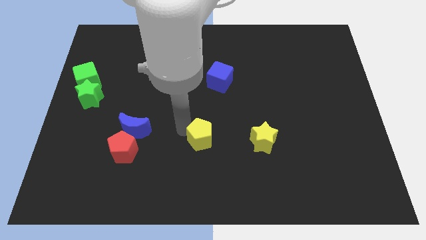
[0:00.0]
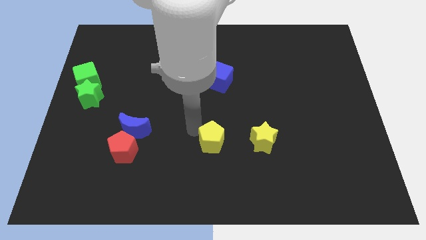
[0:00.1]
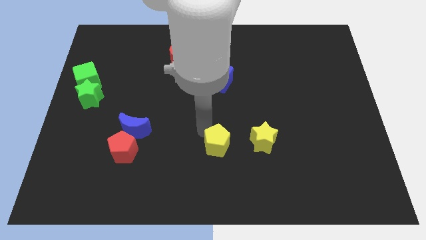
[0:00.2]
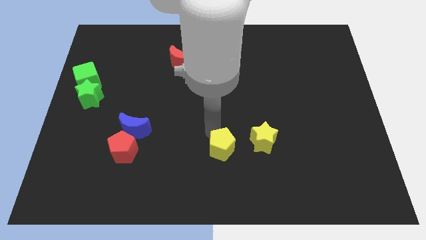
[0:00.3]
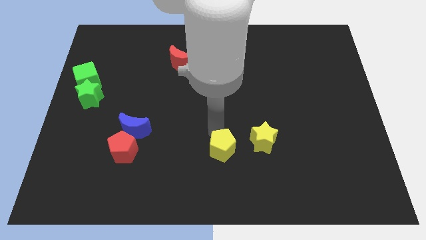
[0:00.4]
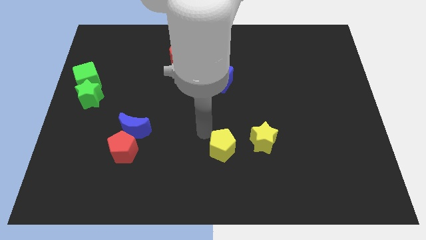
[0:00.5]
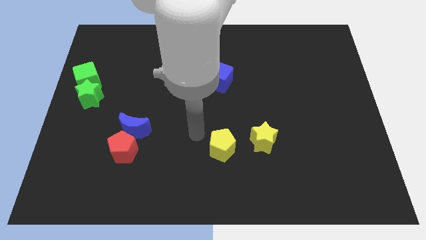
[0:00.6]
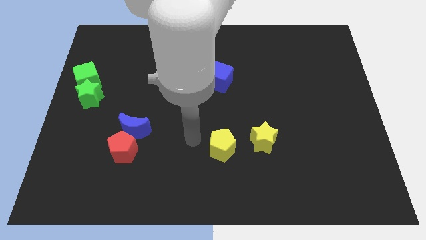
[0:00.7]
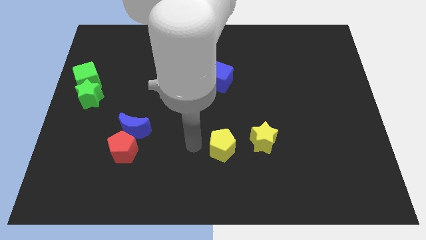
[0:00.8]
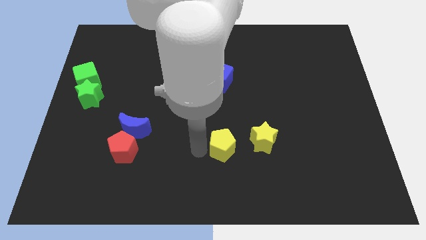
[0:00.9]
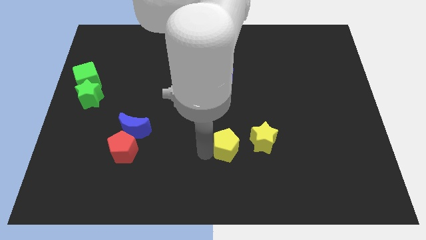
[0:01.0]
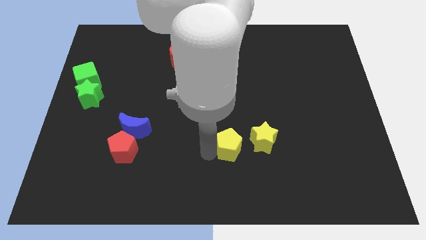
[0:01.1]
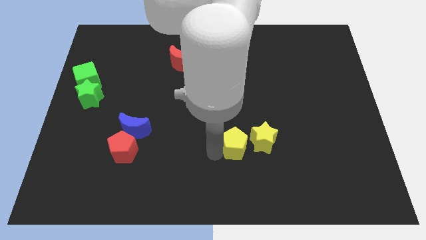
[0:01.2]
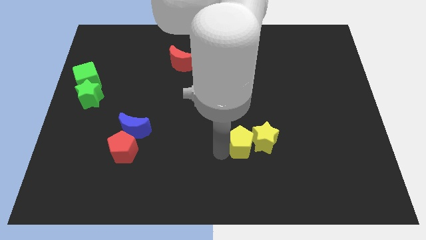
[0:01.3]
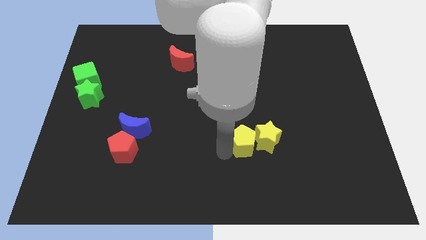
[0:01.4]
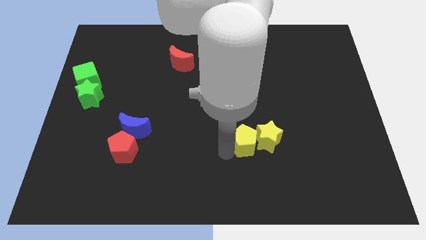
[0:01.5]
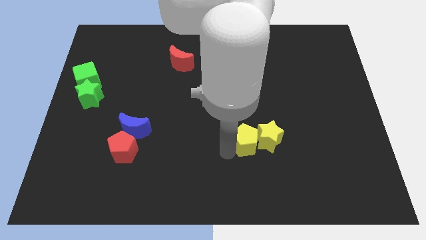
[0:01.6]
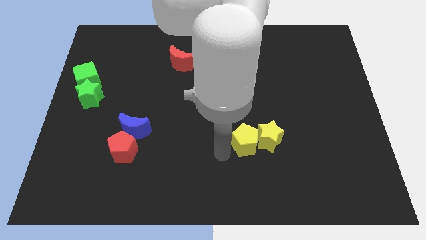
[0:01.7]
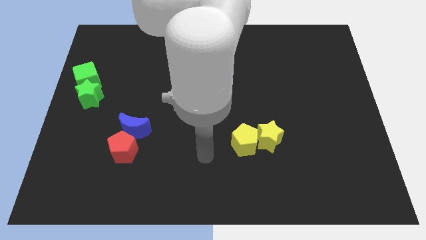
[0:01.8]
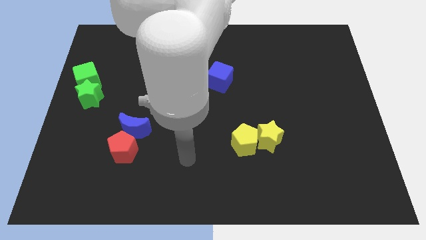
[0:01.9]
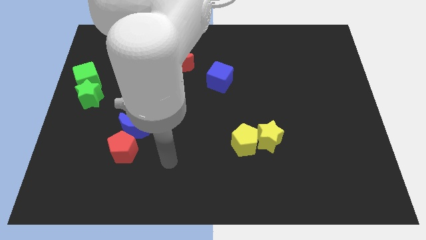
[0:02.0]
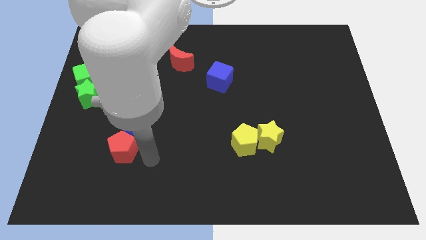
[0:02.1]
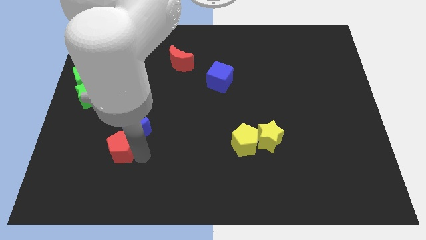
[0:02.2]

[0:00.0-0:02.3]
move the yellow pentagon into yellow star

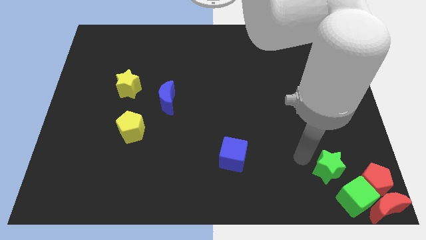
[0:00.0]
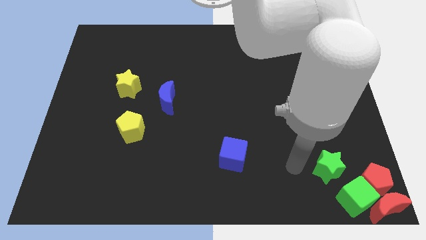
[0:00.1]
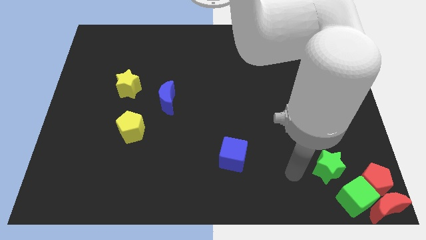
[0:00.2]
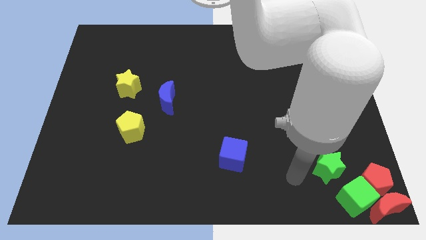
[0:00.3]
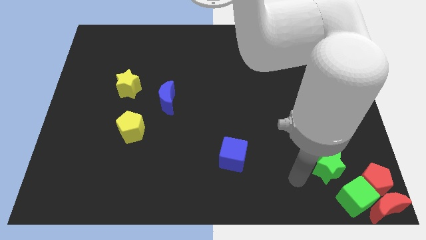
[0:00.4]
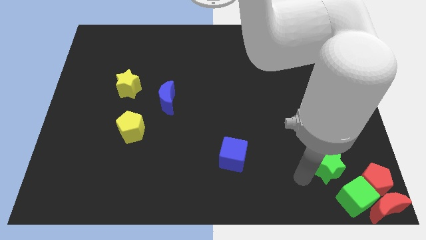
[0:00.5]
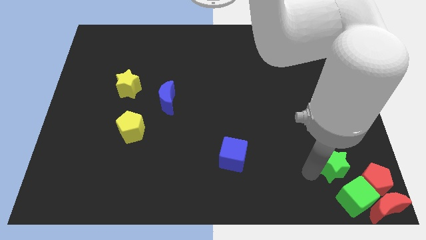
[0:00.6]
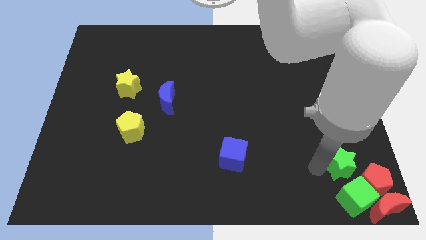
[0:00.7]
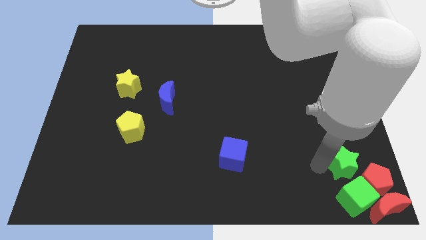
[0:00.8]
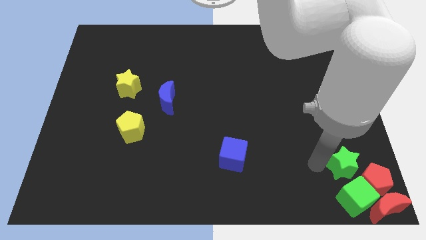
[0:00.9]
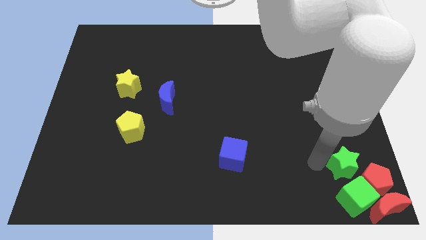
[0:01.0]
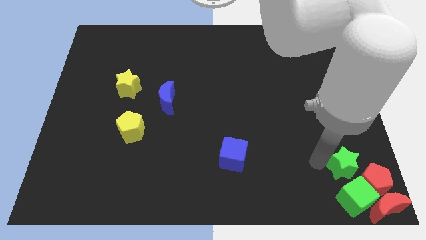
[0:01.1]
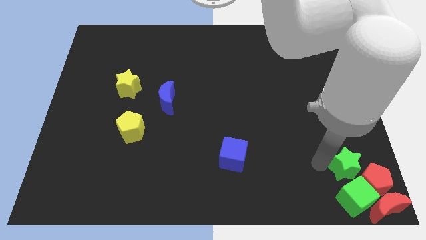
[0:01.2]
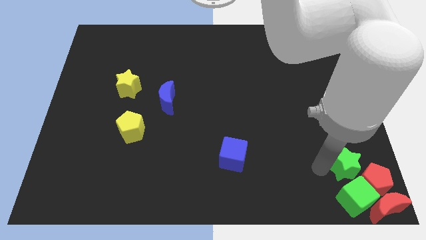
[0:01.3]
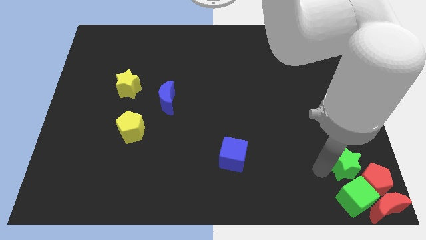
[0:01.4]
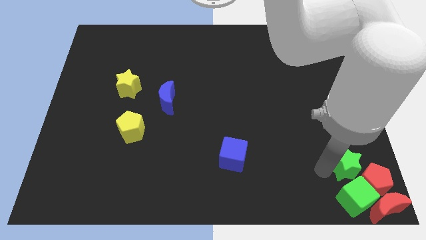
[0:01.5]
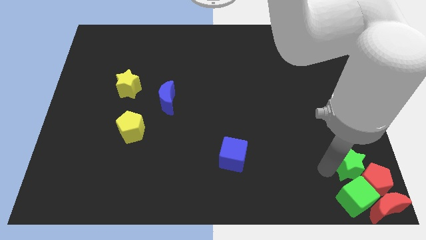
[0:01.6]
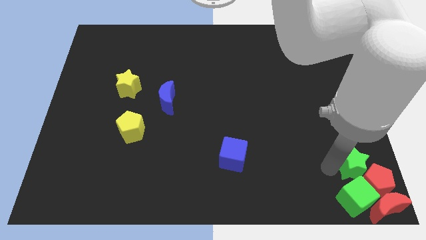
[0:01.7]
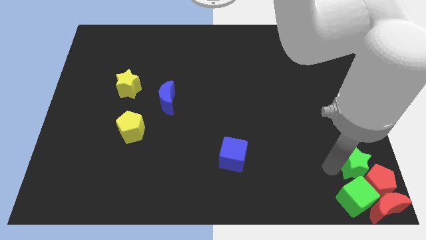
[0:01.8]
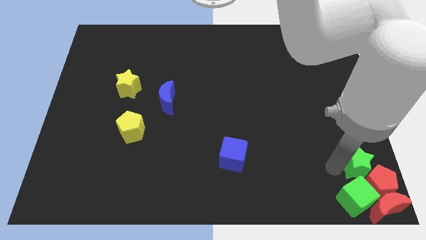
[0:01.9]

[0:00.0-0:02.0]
slide the green star into the red pentagon

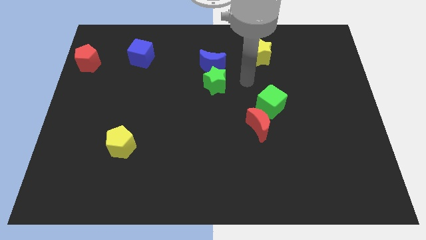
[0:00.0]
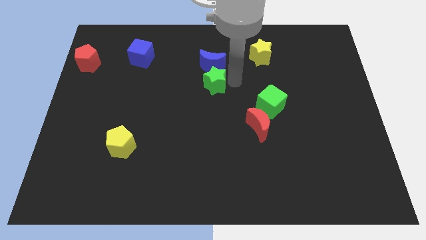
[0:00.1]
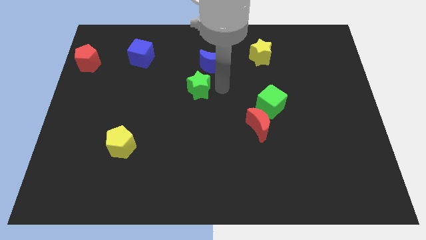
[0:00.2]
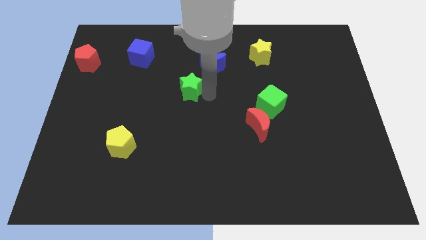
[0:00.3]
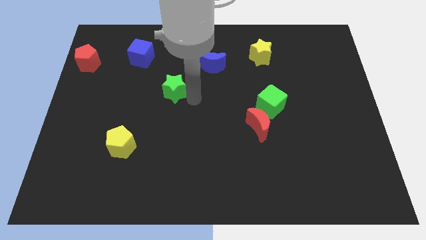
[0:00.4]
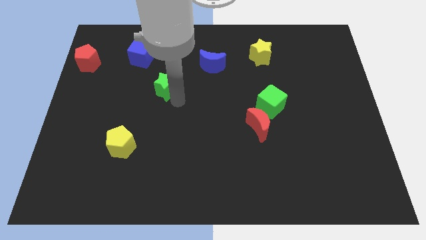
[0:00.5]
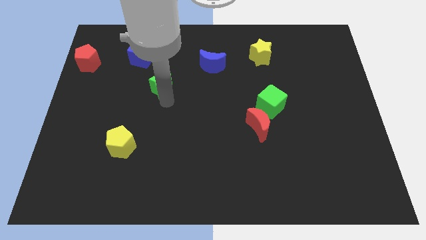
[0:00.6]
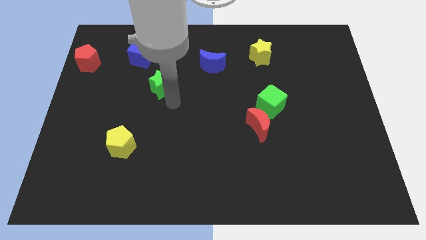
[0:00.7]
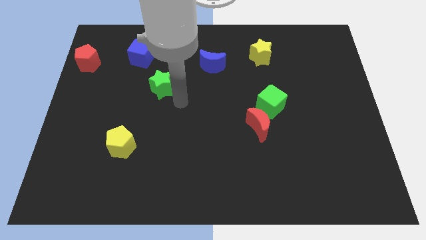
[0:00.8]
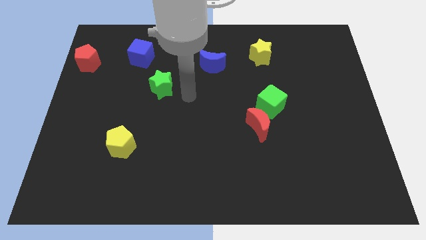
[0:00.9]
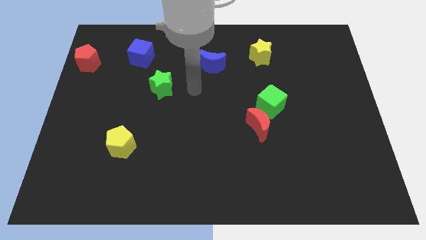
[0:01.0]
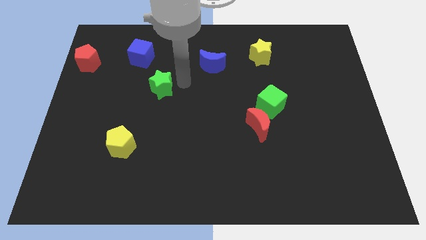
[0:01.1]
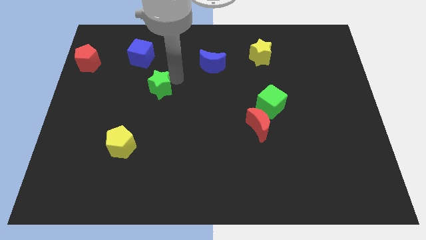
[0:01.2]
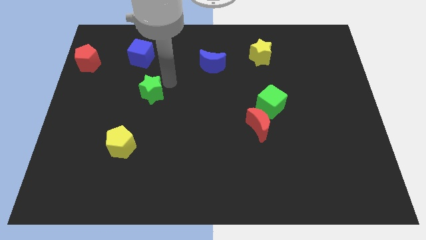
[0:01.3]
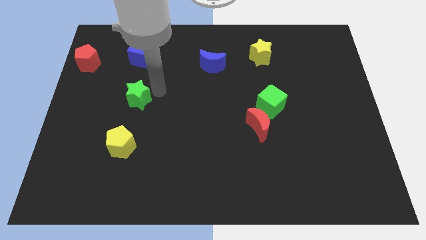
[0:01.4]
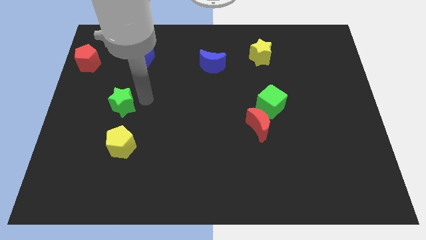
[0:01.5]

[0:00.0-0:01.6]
place the green star below the blue cube

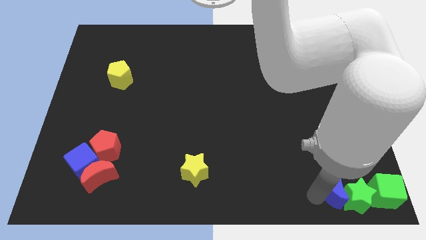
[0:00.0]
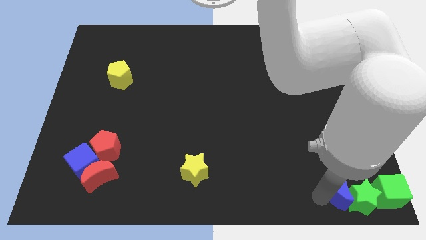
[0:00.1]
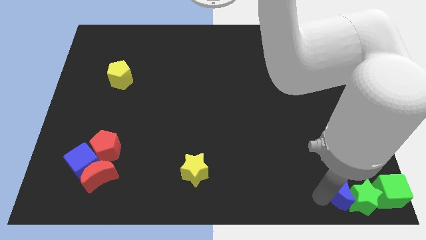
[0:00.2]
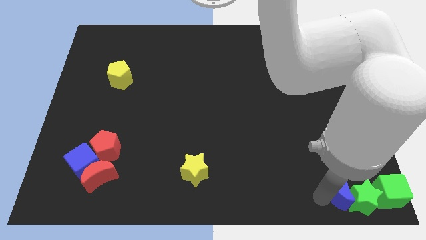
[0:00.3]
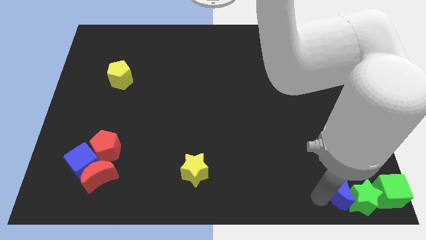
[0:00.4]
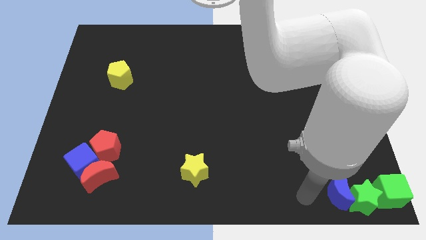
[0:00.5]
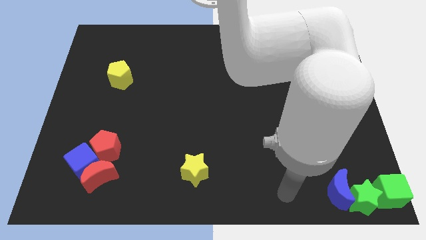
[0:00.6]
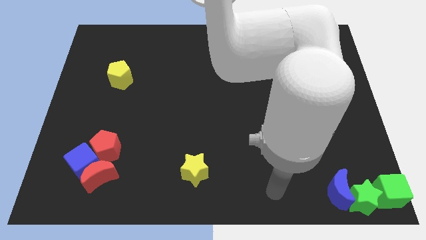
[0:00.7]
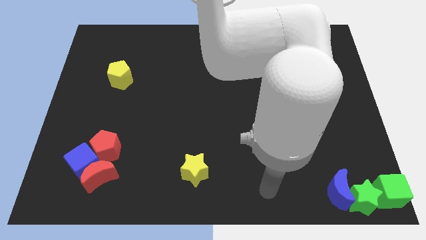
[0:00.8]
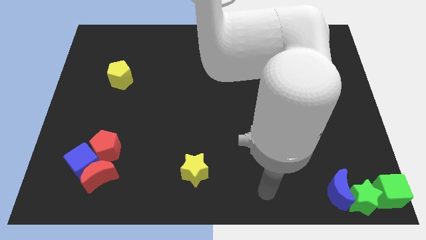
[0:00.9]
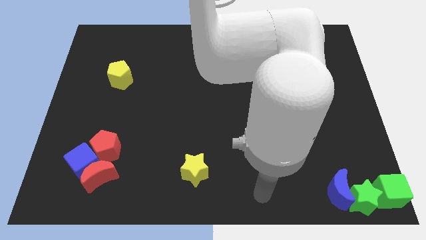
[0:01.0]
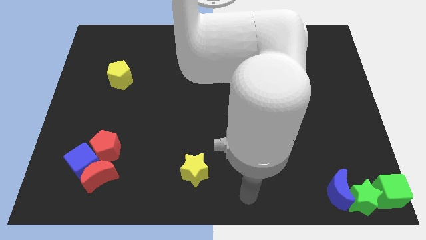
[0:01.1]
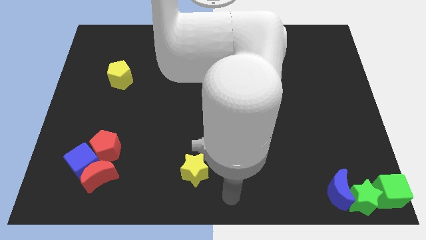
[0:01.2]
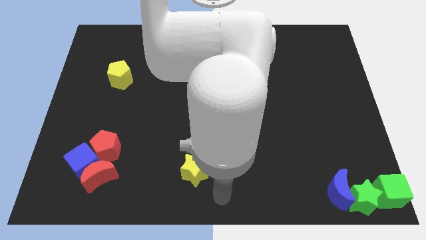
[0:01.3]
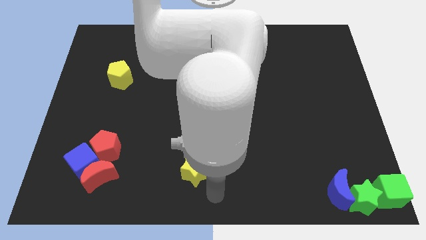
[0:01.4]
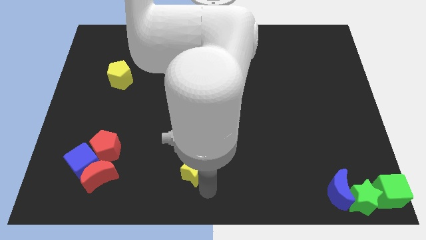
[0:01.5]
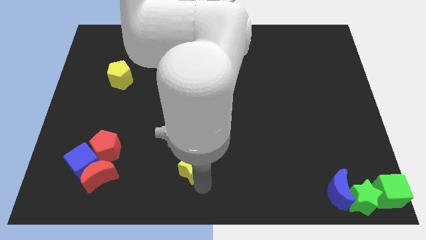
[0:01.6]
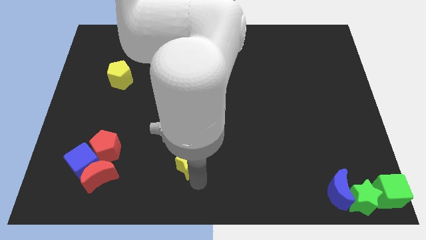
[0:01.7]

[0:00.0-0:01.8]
touch the bottom right of the yellow star

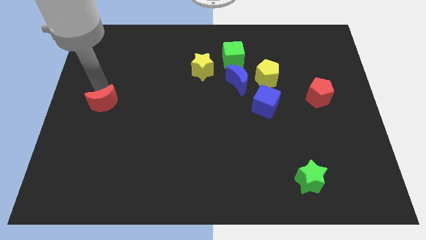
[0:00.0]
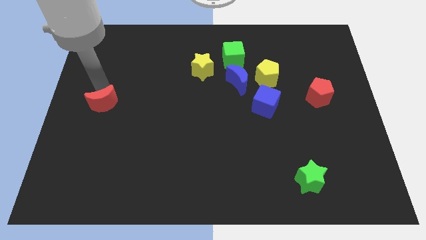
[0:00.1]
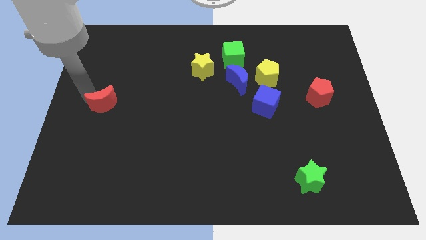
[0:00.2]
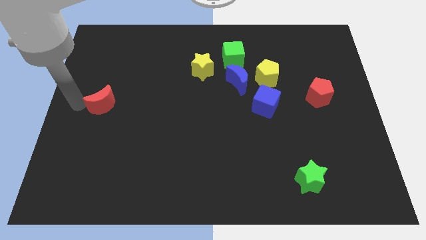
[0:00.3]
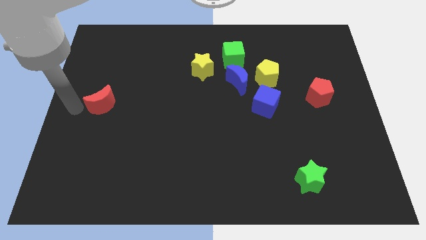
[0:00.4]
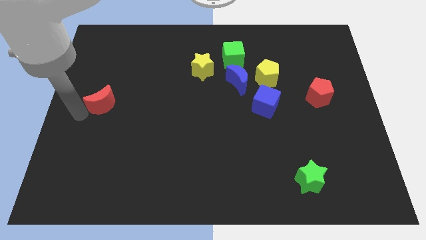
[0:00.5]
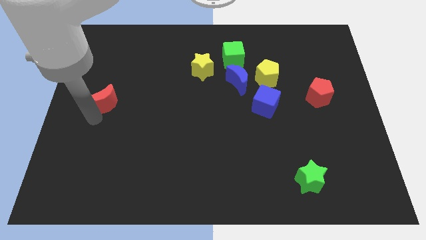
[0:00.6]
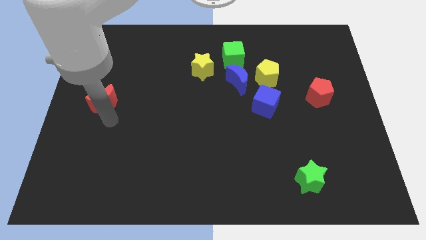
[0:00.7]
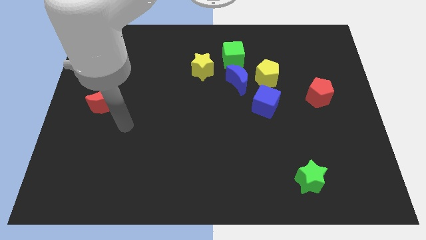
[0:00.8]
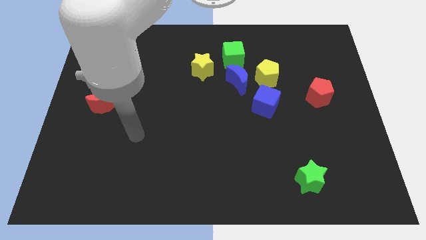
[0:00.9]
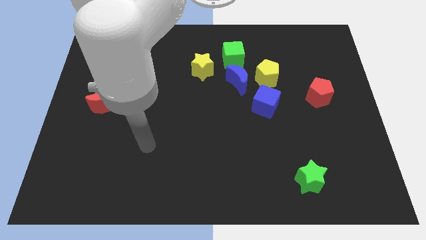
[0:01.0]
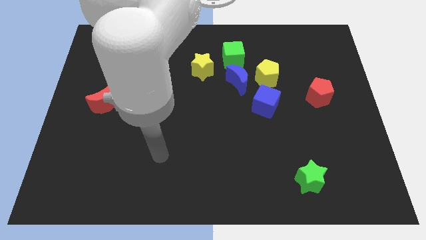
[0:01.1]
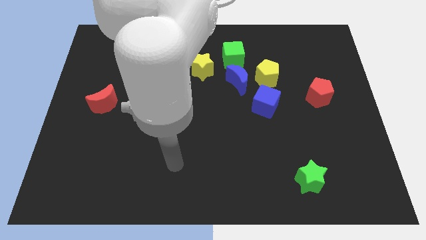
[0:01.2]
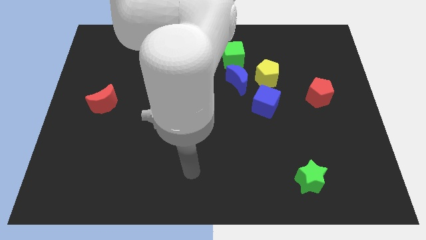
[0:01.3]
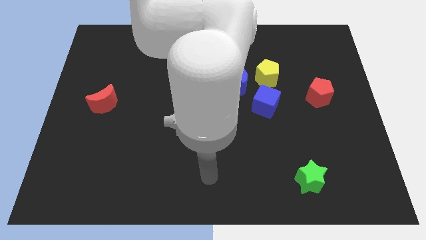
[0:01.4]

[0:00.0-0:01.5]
move away from the red moon
